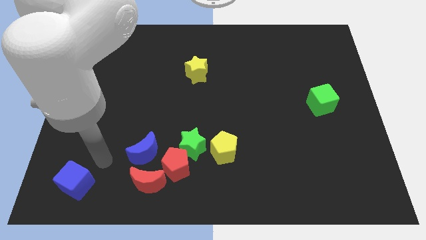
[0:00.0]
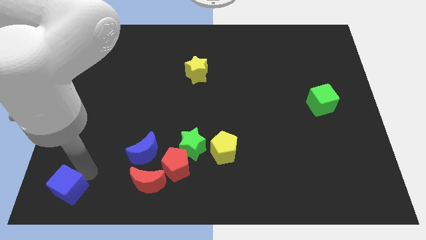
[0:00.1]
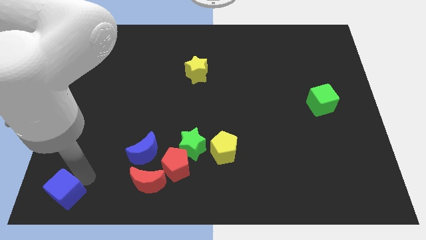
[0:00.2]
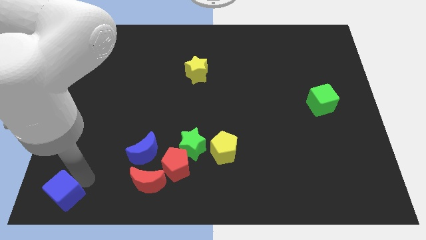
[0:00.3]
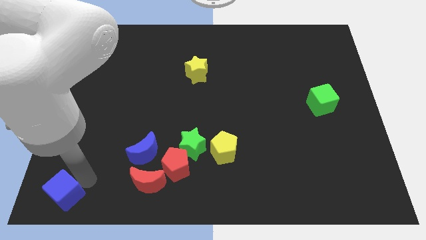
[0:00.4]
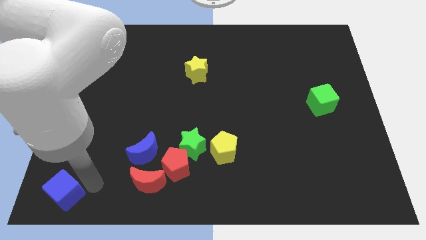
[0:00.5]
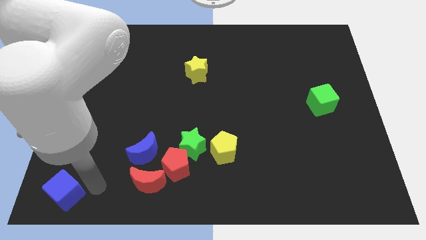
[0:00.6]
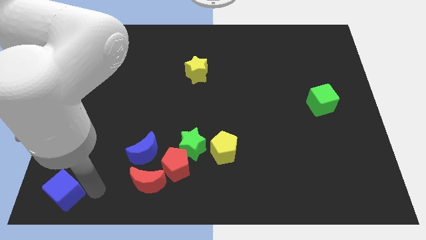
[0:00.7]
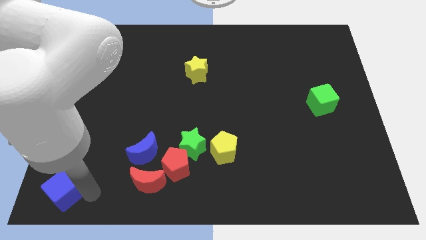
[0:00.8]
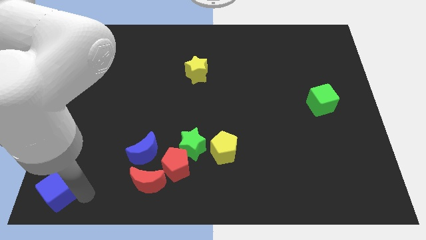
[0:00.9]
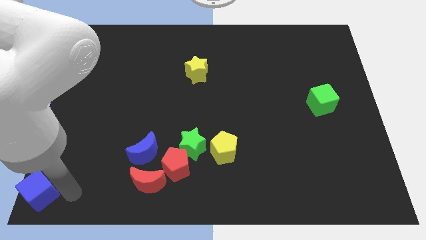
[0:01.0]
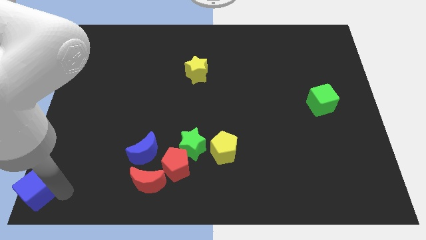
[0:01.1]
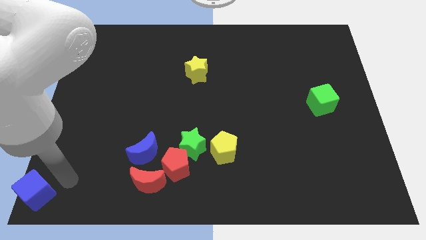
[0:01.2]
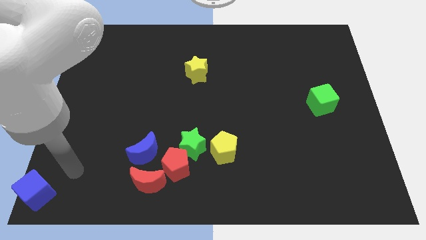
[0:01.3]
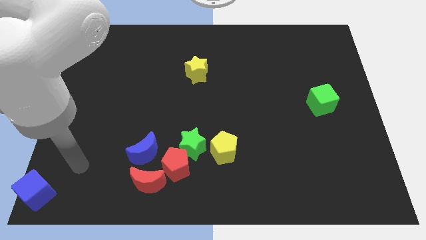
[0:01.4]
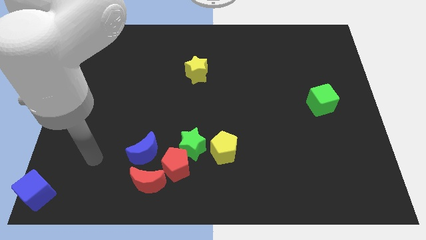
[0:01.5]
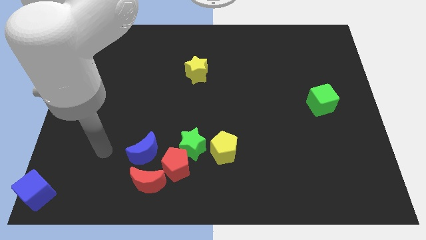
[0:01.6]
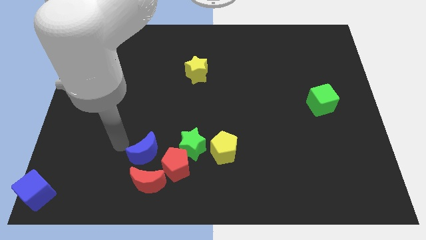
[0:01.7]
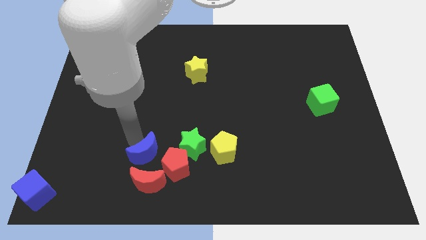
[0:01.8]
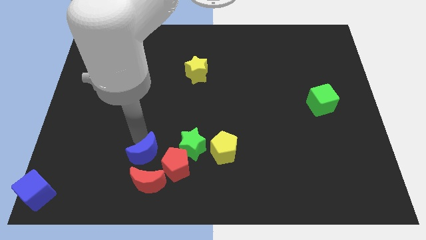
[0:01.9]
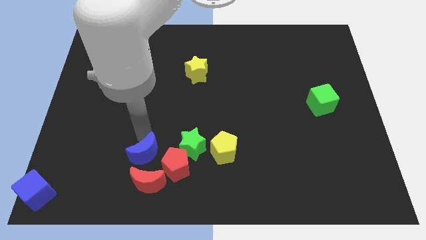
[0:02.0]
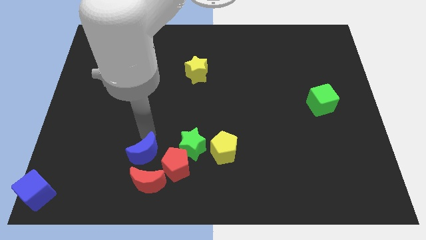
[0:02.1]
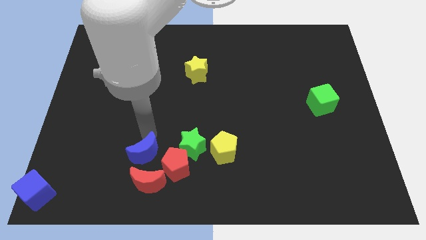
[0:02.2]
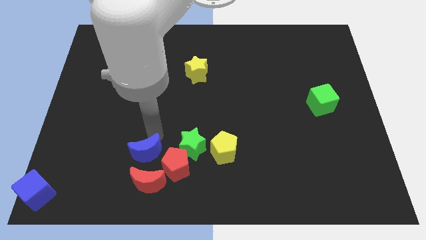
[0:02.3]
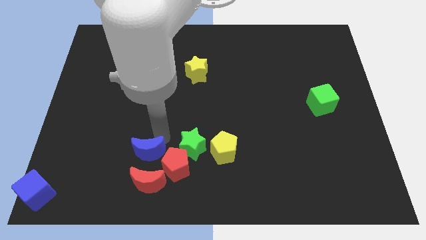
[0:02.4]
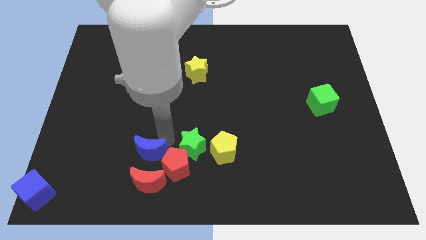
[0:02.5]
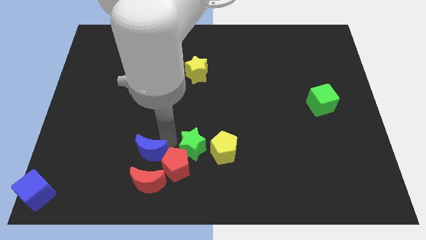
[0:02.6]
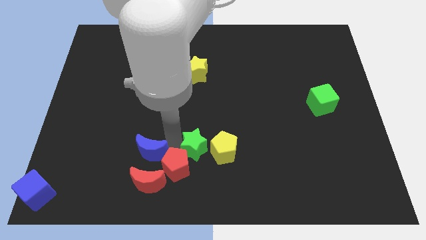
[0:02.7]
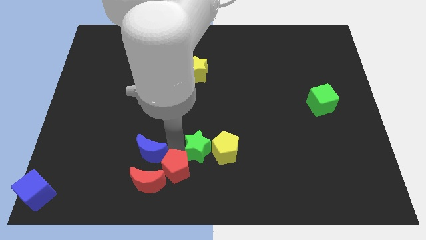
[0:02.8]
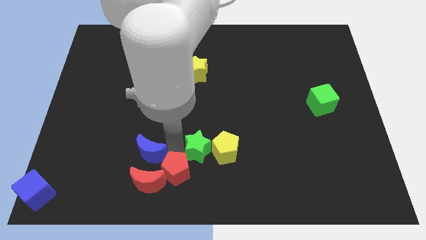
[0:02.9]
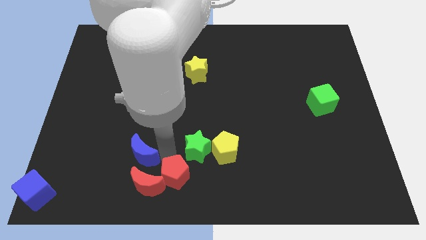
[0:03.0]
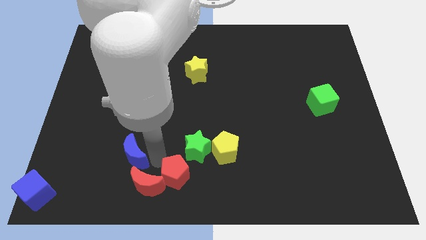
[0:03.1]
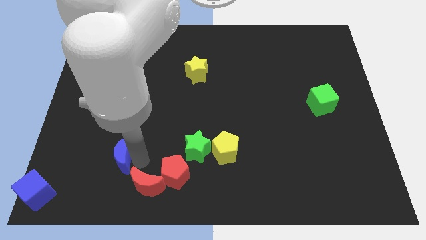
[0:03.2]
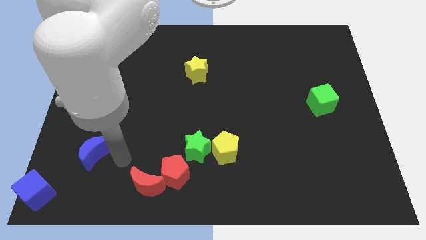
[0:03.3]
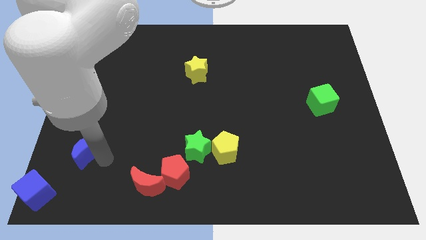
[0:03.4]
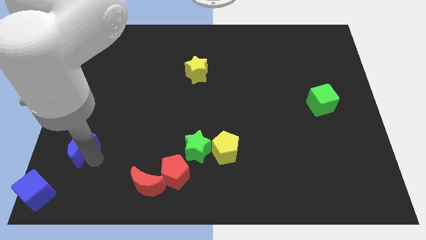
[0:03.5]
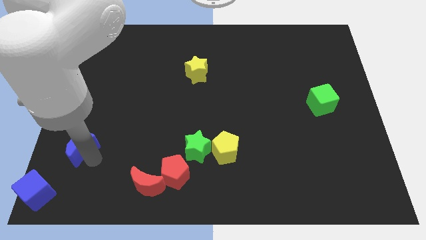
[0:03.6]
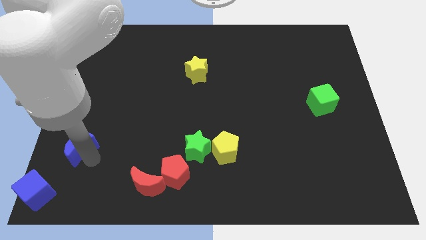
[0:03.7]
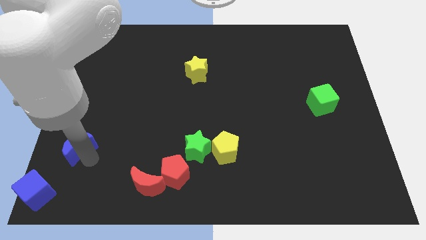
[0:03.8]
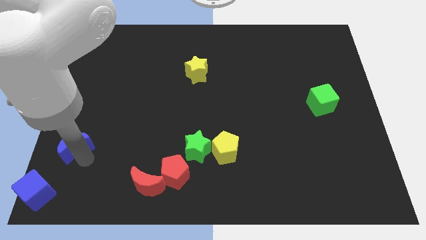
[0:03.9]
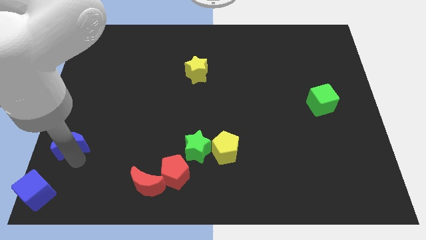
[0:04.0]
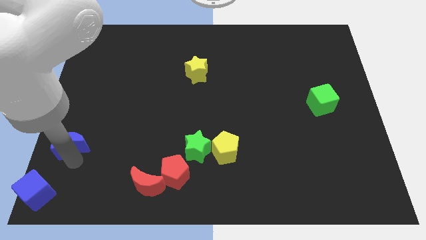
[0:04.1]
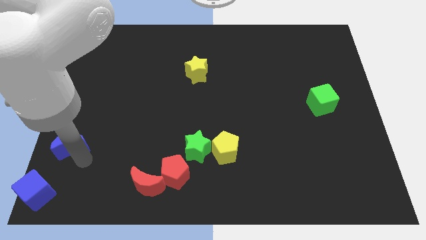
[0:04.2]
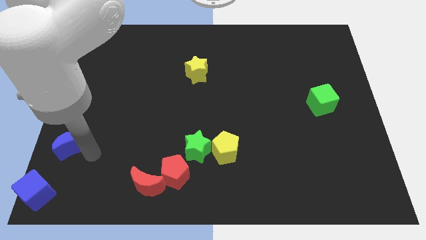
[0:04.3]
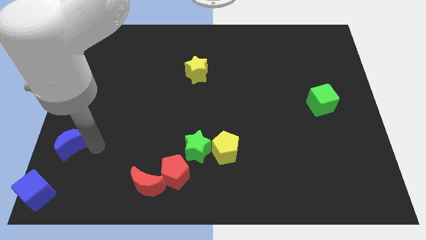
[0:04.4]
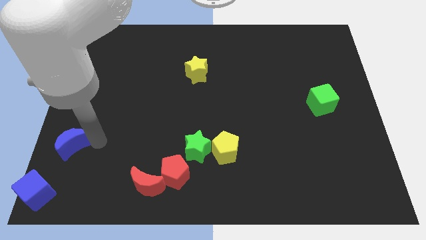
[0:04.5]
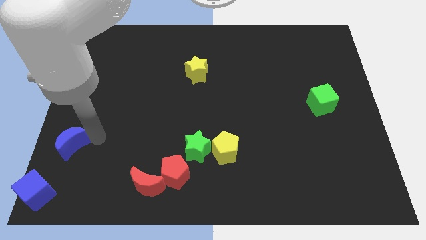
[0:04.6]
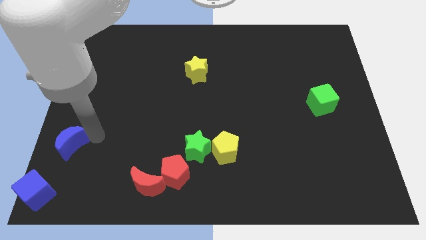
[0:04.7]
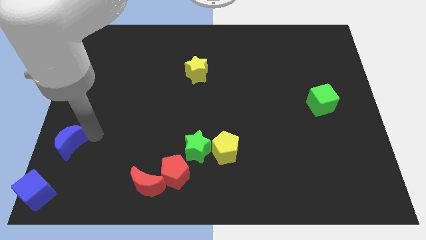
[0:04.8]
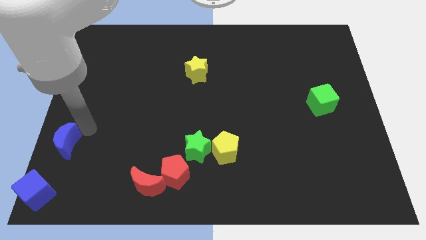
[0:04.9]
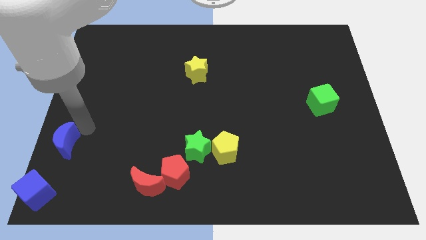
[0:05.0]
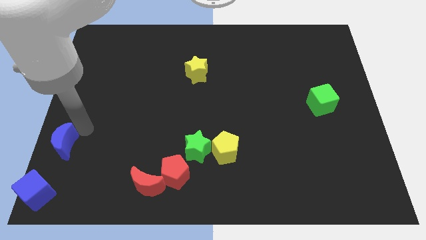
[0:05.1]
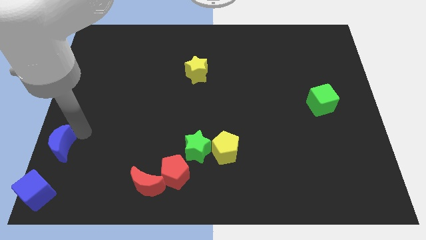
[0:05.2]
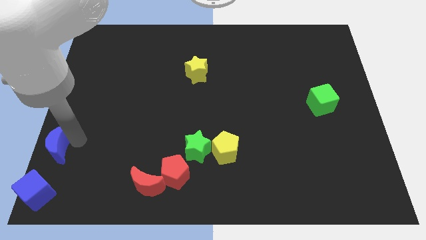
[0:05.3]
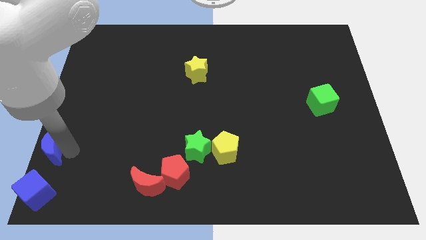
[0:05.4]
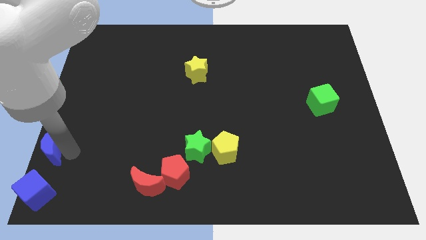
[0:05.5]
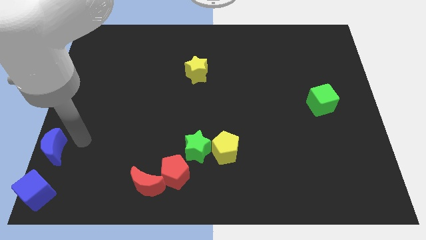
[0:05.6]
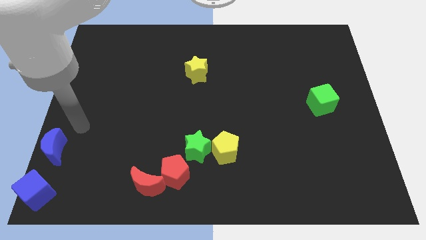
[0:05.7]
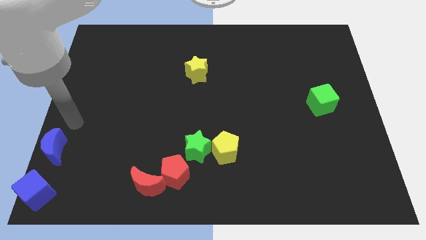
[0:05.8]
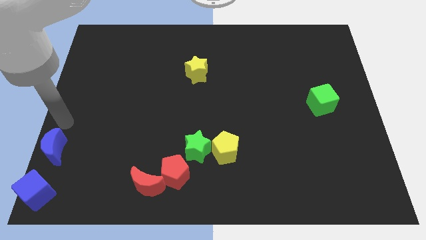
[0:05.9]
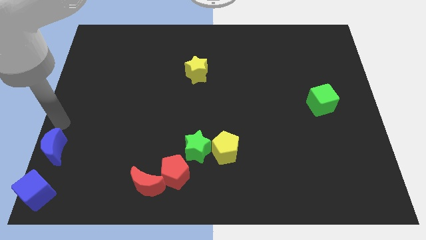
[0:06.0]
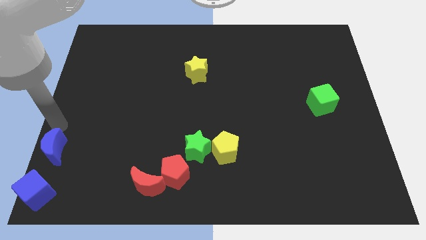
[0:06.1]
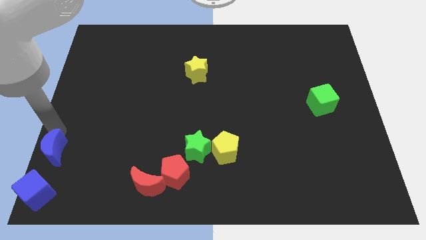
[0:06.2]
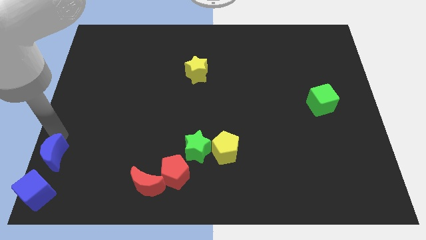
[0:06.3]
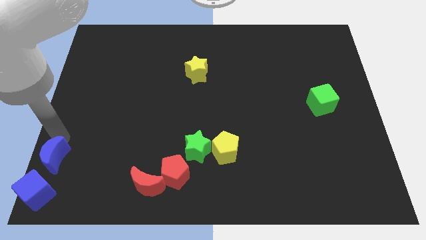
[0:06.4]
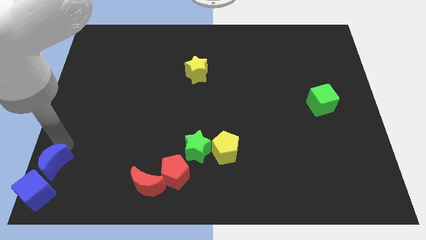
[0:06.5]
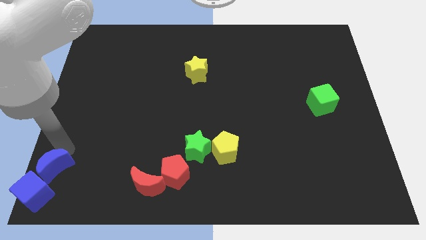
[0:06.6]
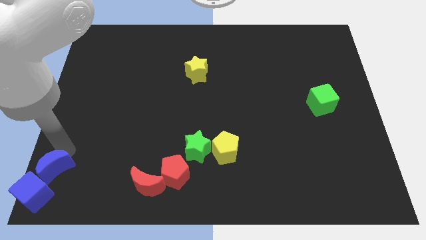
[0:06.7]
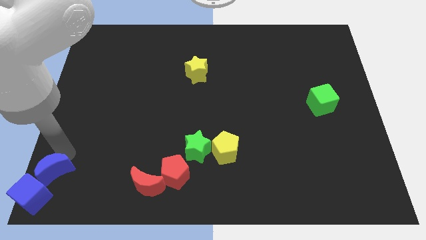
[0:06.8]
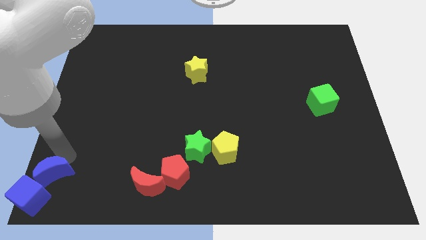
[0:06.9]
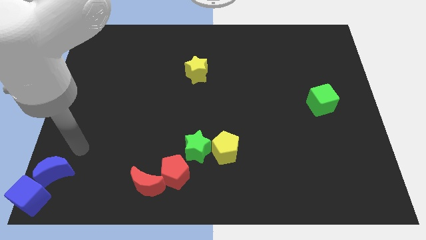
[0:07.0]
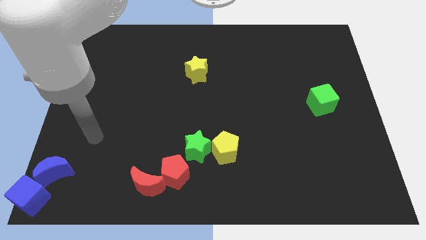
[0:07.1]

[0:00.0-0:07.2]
move blue blocks to the bottom left corner of the board

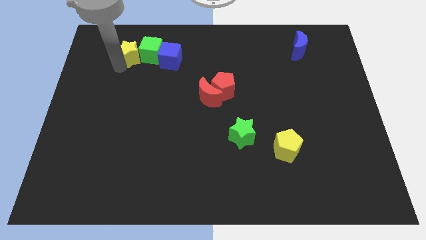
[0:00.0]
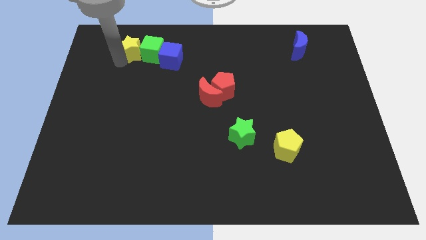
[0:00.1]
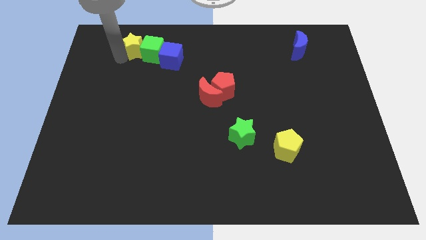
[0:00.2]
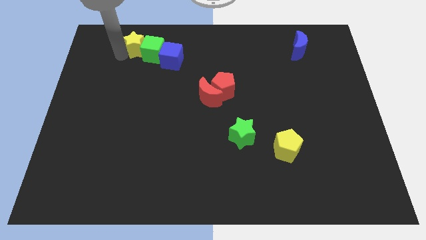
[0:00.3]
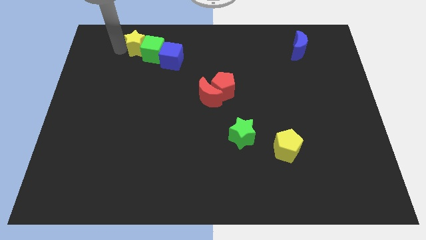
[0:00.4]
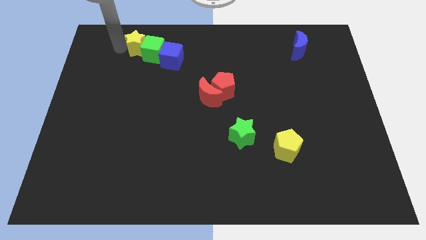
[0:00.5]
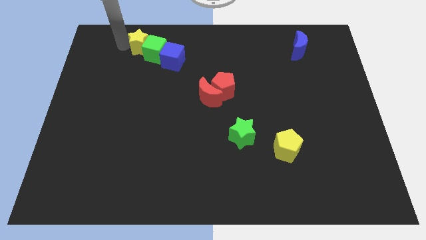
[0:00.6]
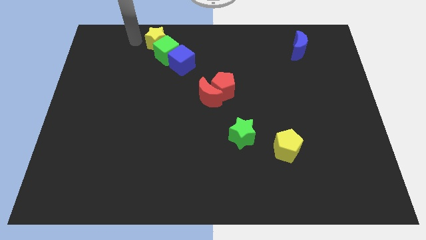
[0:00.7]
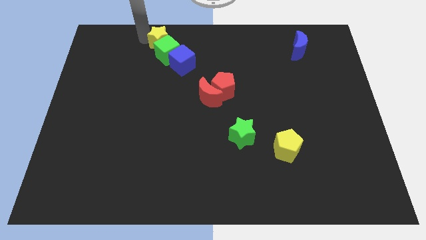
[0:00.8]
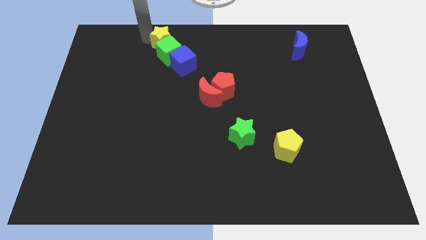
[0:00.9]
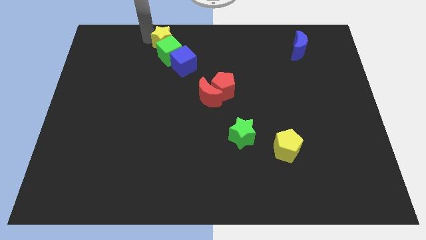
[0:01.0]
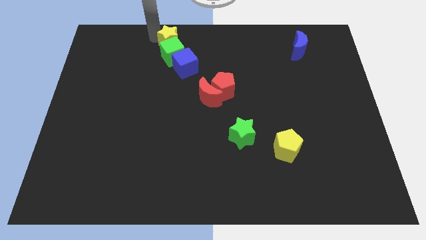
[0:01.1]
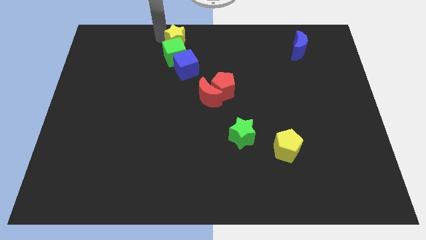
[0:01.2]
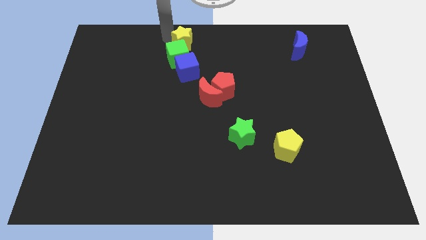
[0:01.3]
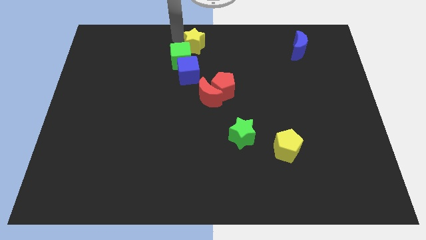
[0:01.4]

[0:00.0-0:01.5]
move yellow star slightly right

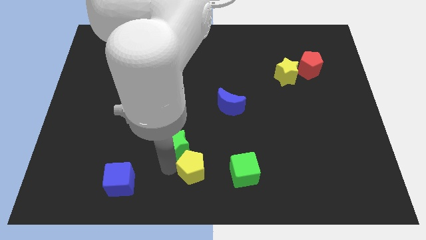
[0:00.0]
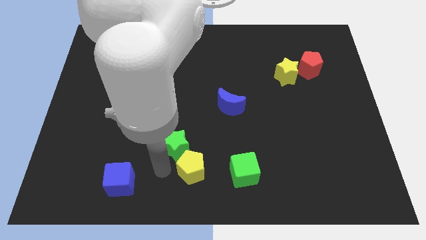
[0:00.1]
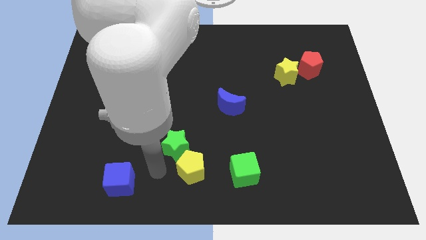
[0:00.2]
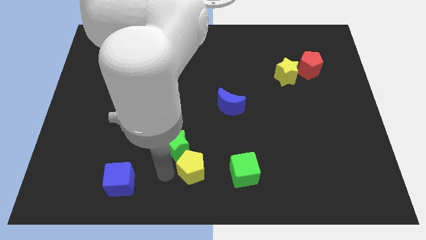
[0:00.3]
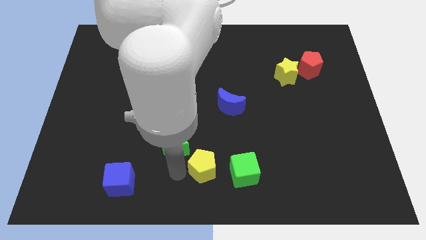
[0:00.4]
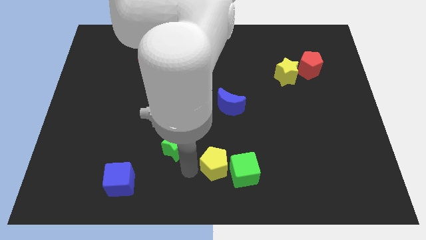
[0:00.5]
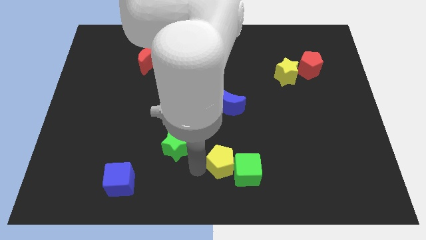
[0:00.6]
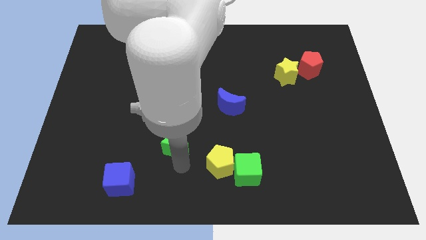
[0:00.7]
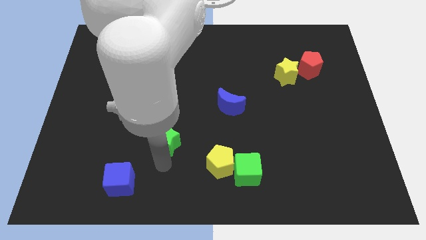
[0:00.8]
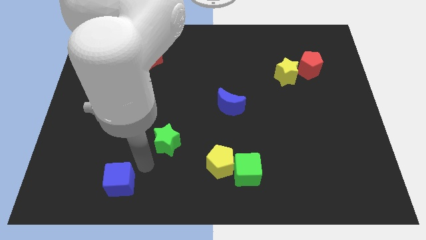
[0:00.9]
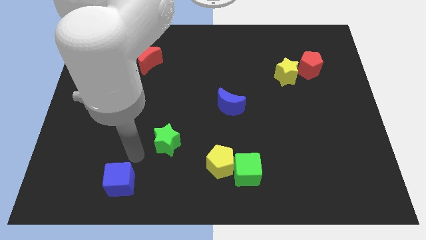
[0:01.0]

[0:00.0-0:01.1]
add yellow pentagon into green cube
